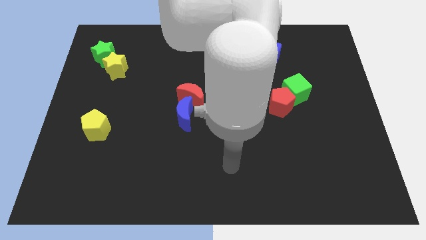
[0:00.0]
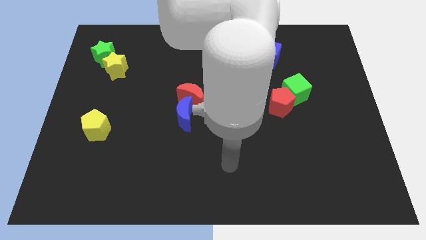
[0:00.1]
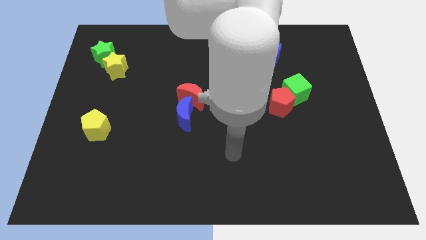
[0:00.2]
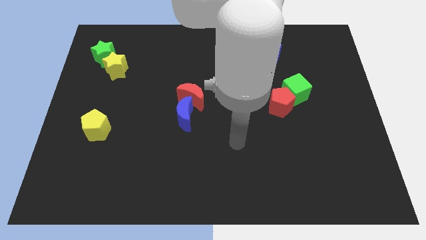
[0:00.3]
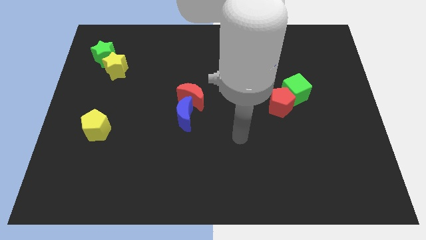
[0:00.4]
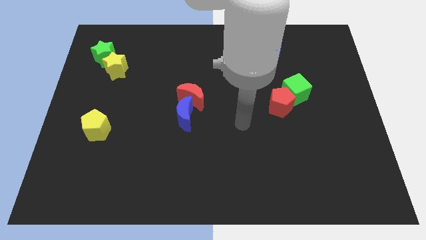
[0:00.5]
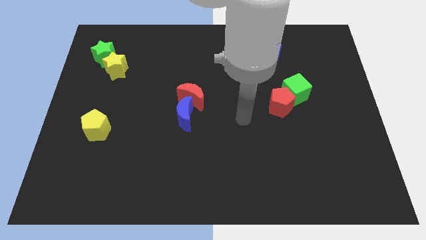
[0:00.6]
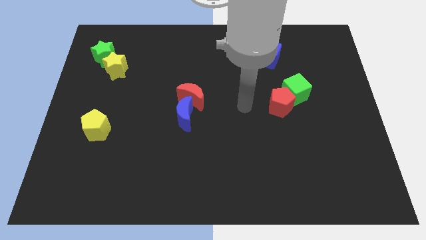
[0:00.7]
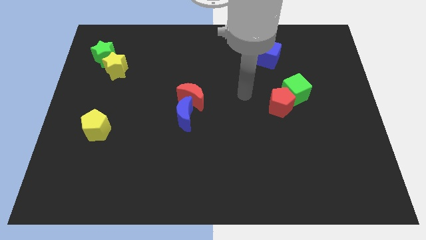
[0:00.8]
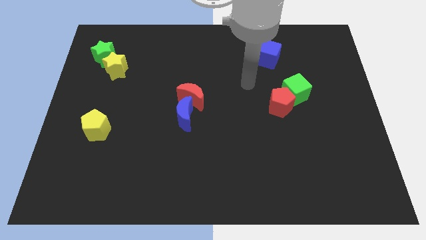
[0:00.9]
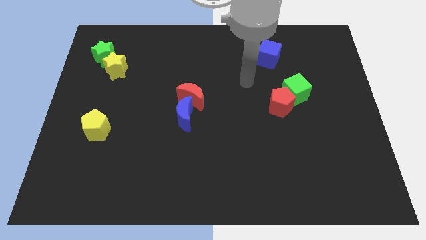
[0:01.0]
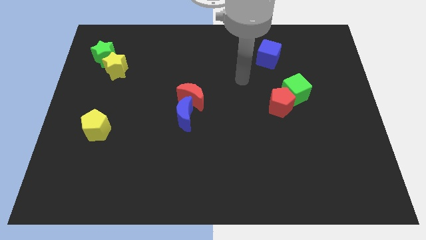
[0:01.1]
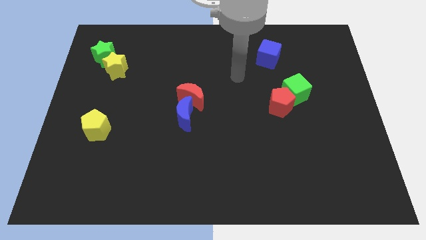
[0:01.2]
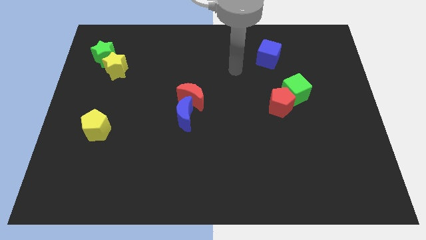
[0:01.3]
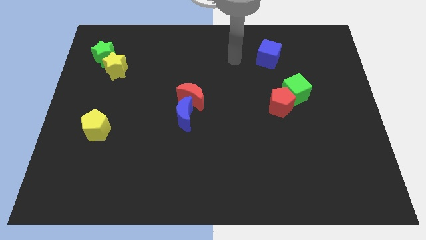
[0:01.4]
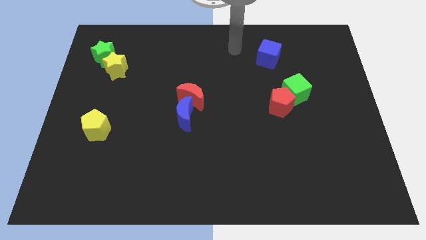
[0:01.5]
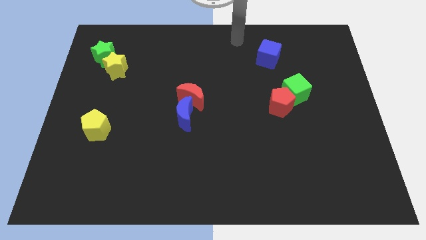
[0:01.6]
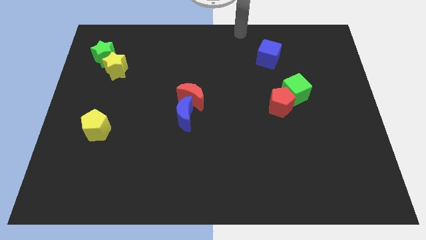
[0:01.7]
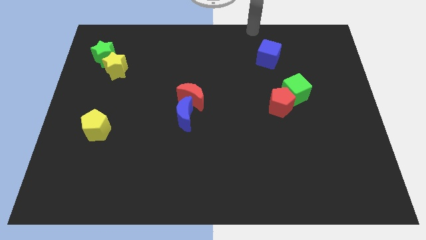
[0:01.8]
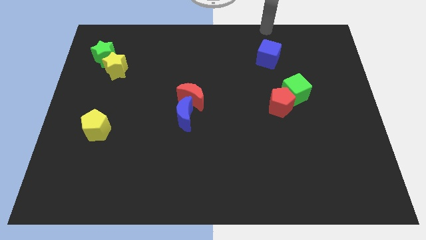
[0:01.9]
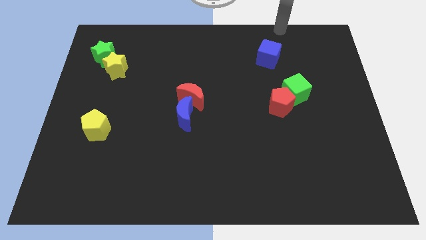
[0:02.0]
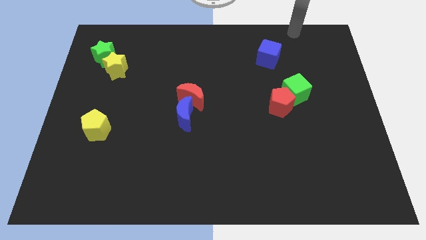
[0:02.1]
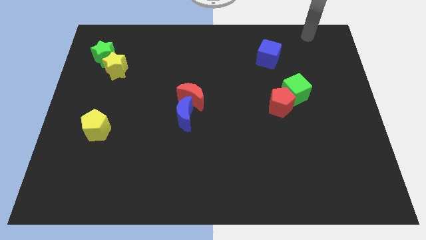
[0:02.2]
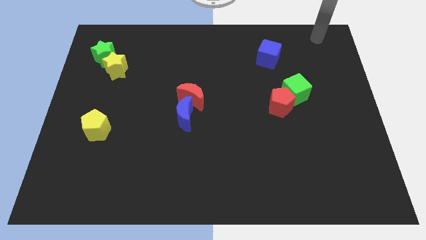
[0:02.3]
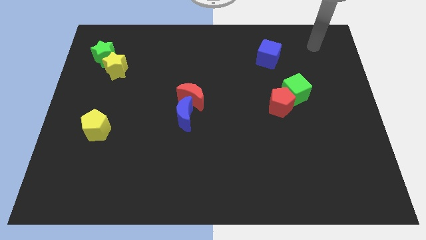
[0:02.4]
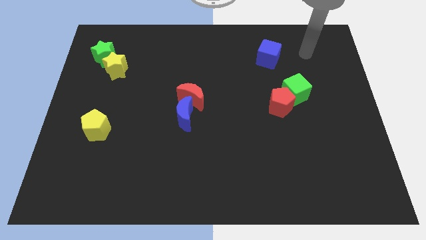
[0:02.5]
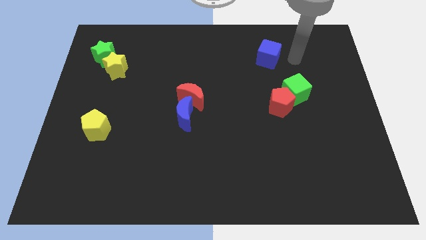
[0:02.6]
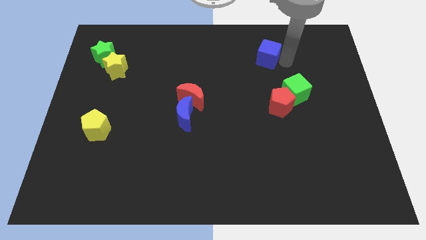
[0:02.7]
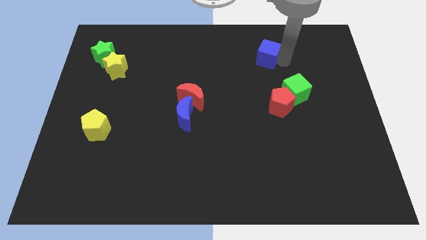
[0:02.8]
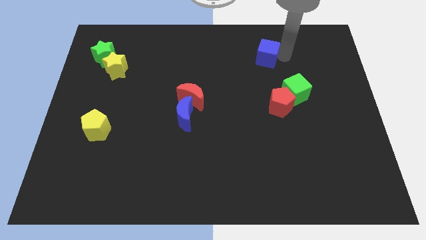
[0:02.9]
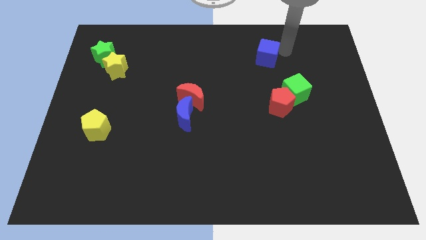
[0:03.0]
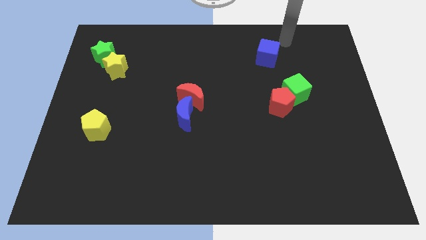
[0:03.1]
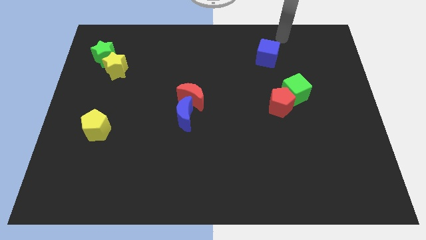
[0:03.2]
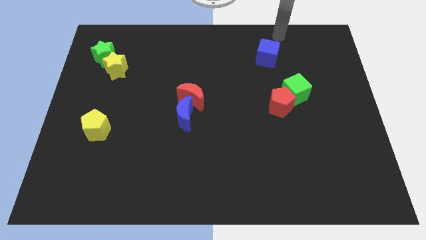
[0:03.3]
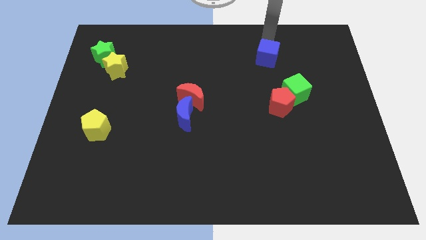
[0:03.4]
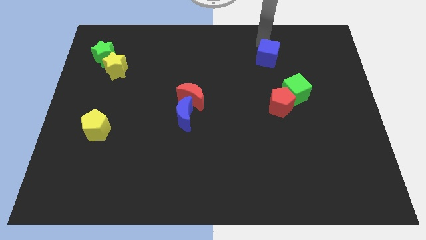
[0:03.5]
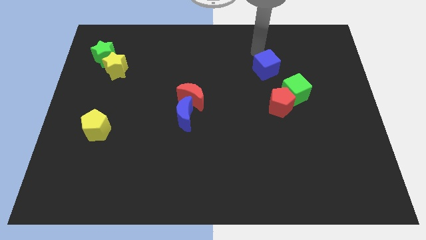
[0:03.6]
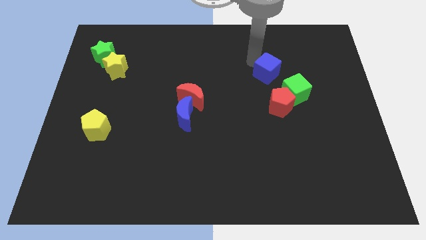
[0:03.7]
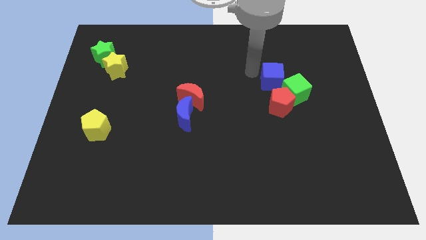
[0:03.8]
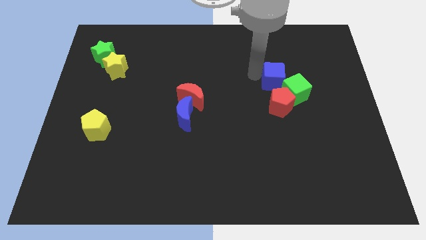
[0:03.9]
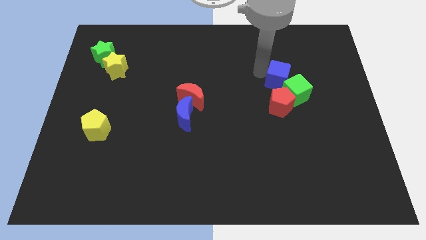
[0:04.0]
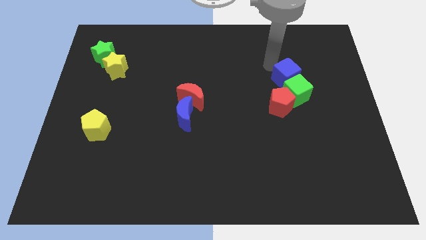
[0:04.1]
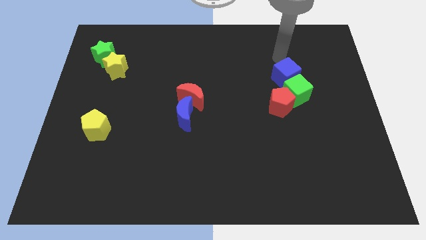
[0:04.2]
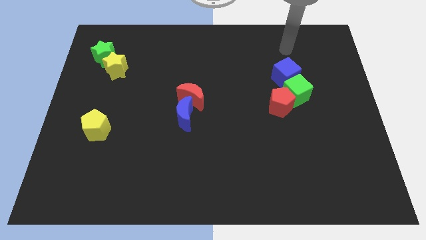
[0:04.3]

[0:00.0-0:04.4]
move the blue cube to the top of the green cube

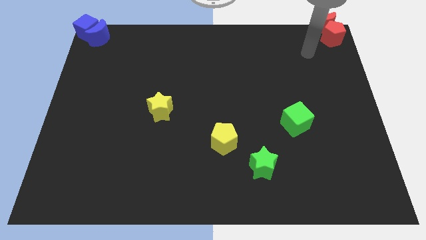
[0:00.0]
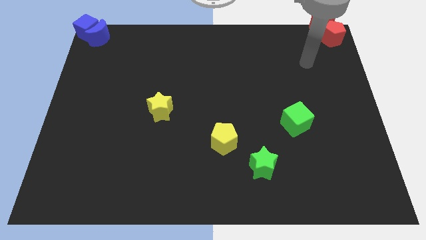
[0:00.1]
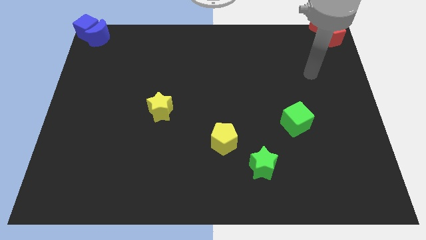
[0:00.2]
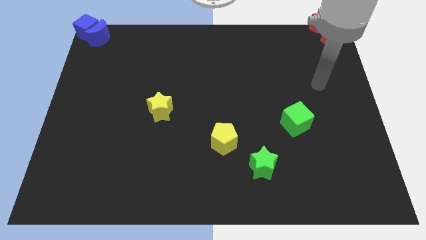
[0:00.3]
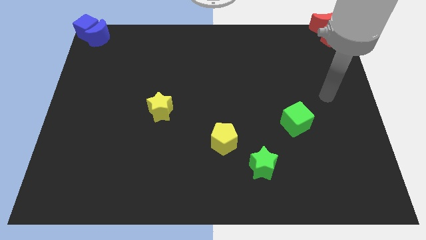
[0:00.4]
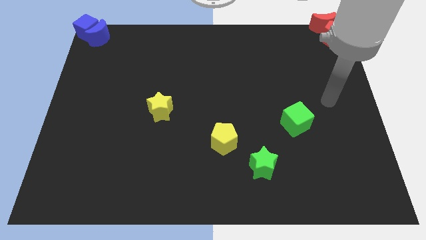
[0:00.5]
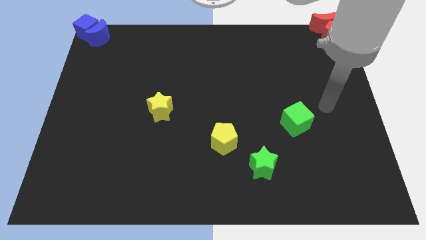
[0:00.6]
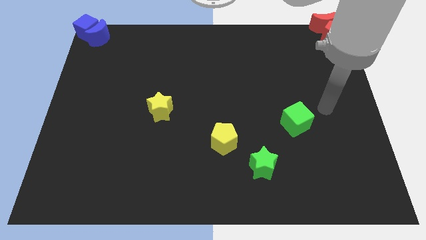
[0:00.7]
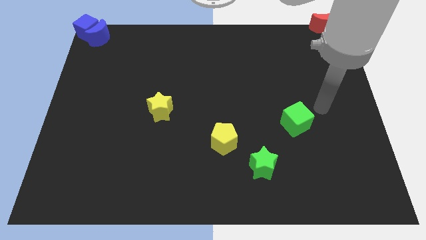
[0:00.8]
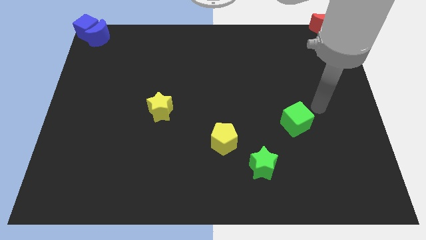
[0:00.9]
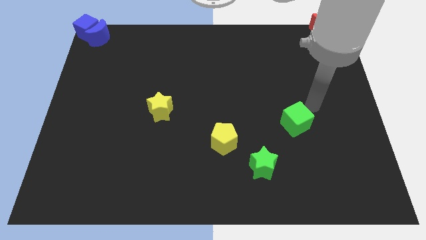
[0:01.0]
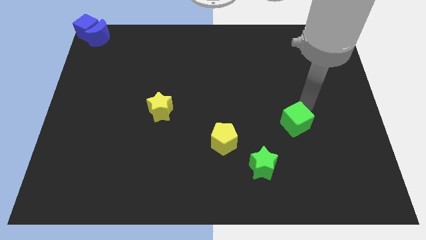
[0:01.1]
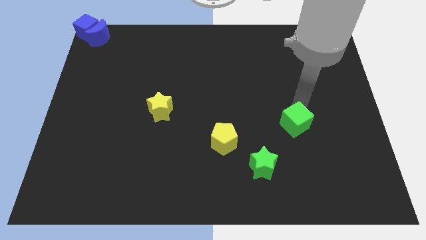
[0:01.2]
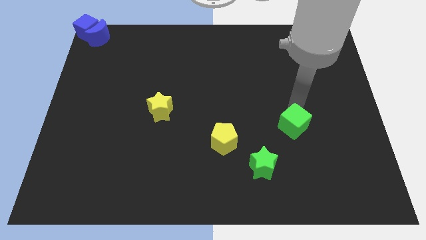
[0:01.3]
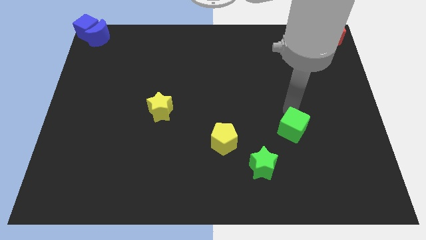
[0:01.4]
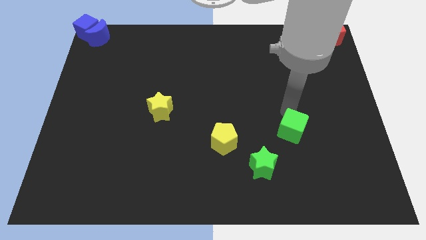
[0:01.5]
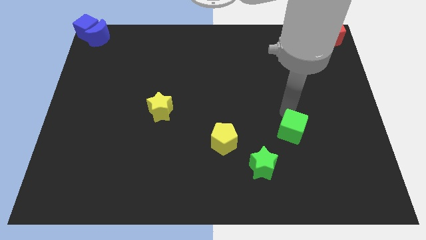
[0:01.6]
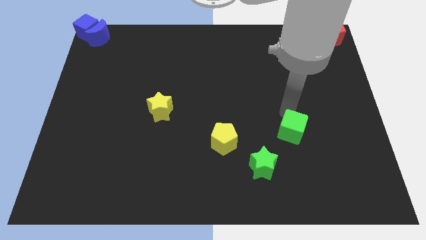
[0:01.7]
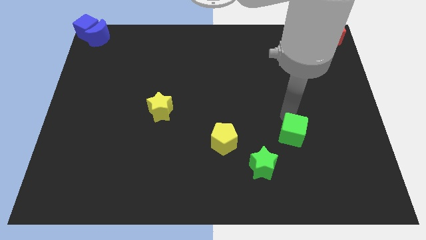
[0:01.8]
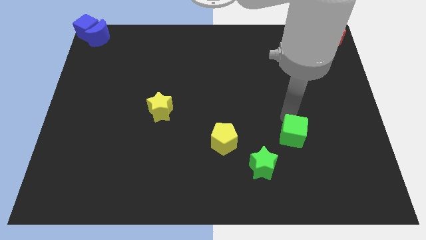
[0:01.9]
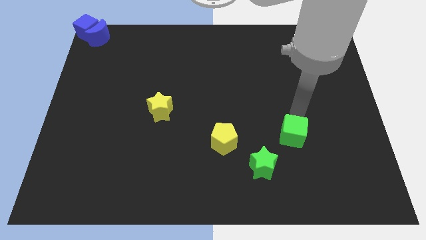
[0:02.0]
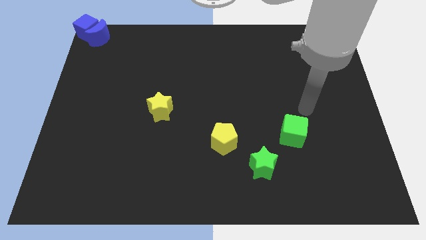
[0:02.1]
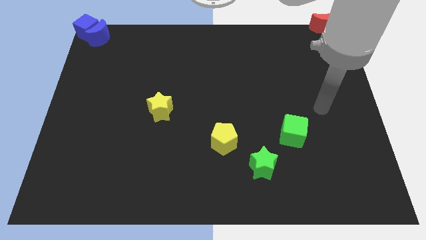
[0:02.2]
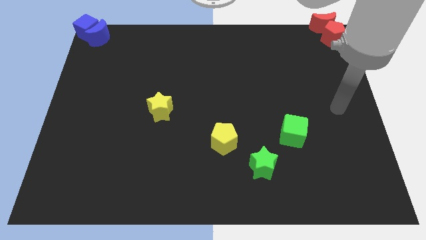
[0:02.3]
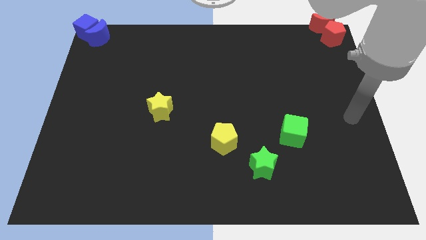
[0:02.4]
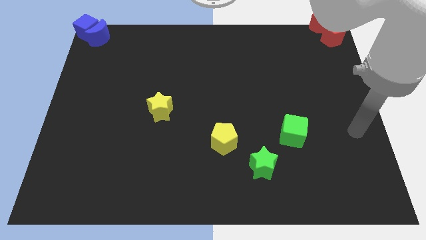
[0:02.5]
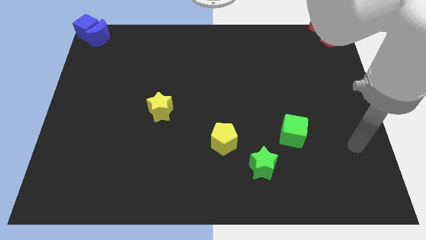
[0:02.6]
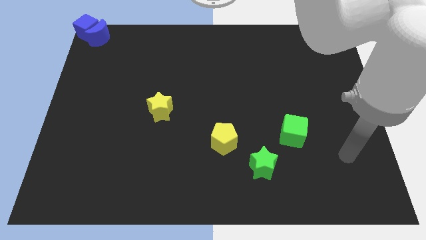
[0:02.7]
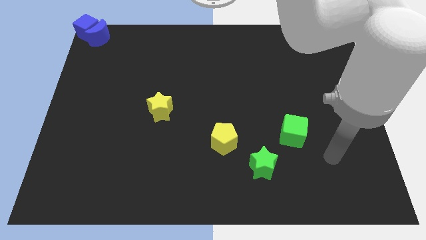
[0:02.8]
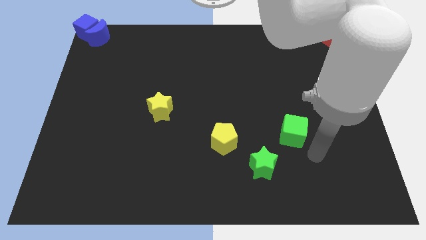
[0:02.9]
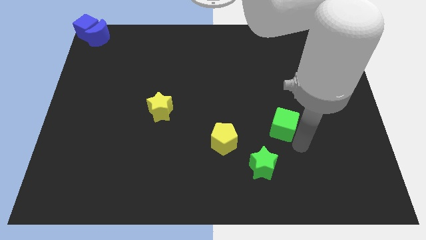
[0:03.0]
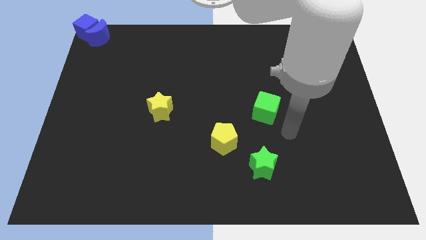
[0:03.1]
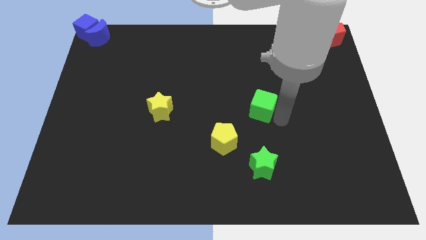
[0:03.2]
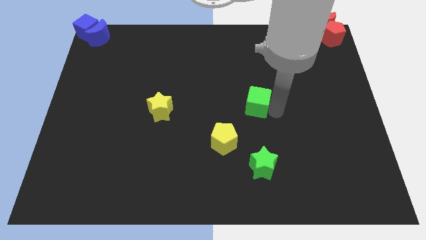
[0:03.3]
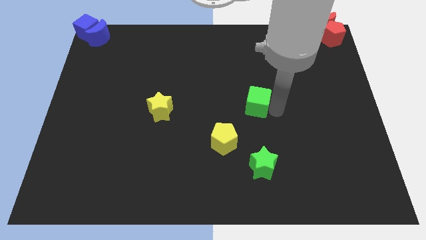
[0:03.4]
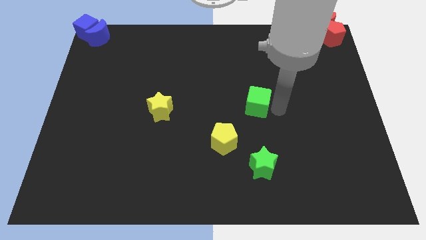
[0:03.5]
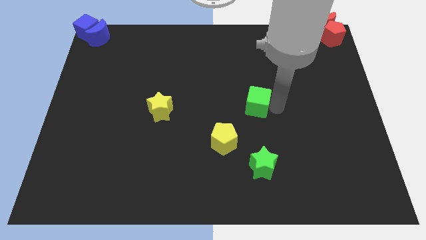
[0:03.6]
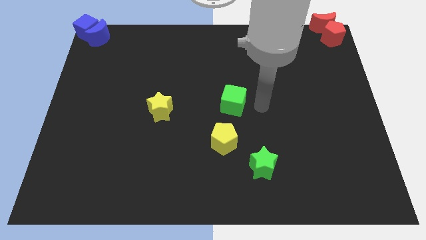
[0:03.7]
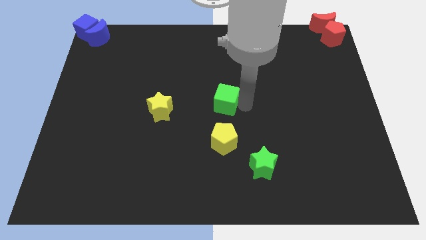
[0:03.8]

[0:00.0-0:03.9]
move the green cube to the top of yellow pentagon

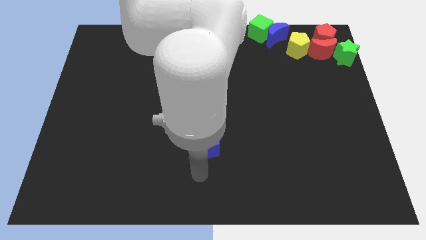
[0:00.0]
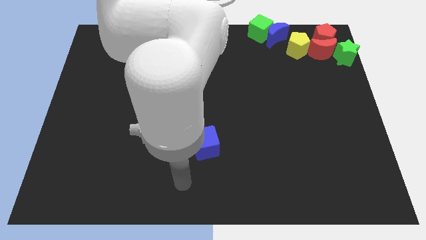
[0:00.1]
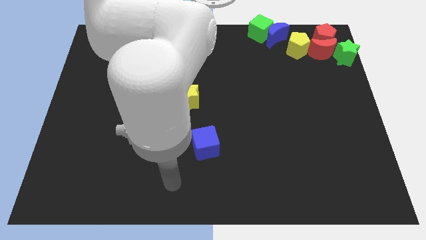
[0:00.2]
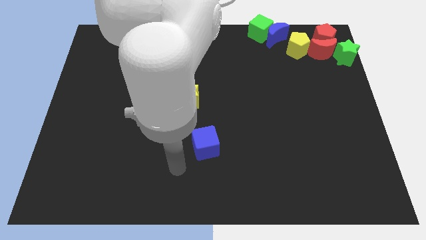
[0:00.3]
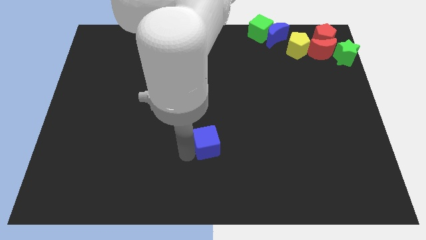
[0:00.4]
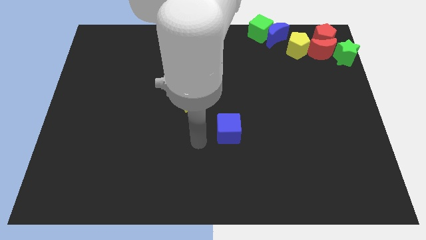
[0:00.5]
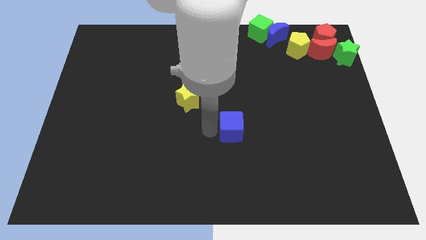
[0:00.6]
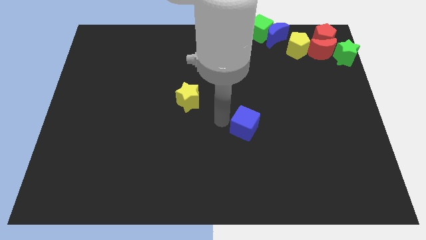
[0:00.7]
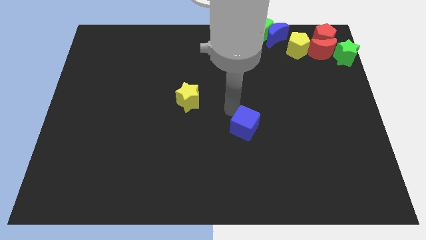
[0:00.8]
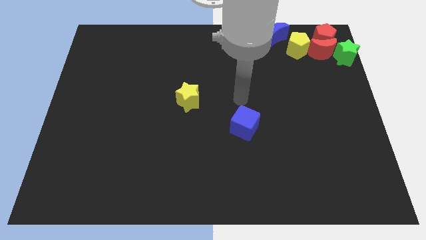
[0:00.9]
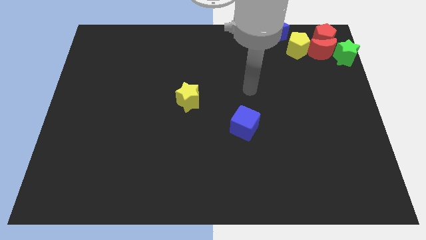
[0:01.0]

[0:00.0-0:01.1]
push the blue cube towards the top right side of the board
